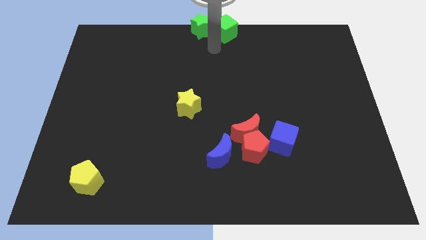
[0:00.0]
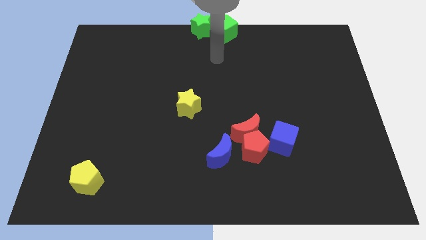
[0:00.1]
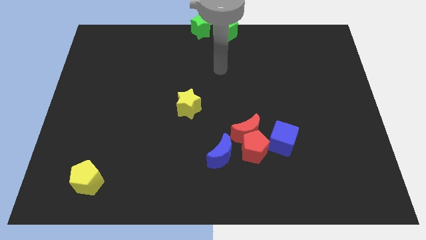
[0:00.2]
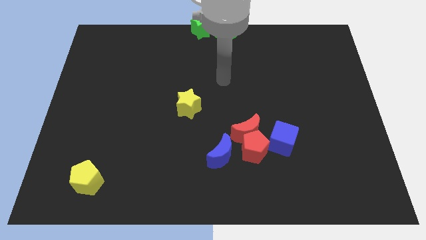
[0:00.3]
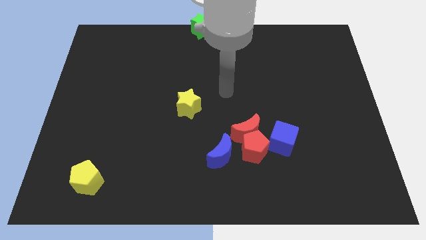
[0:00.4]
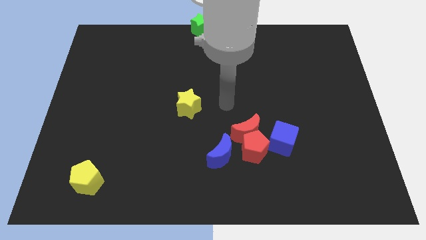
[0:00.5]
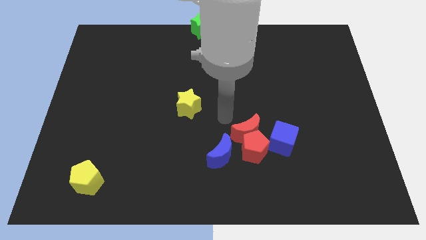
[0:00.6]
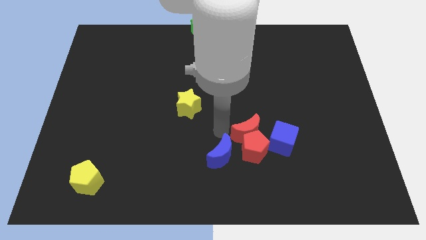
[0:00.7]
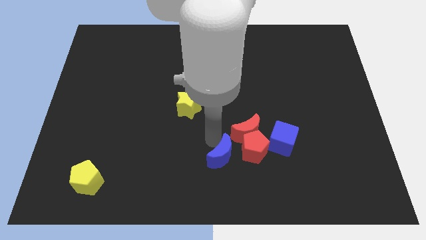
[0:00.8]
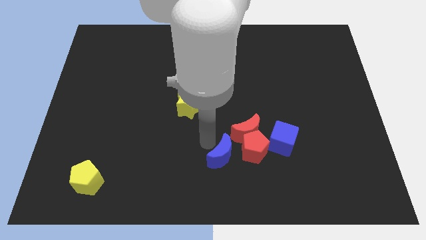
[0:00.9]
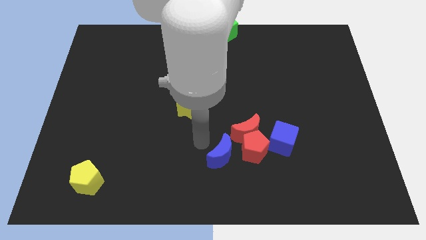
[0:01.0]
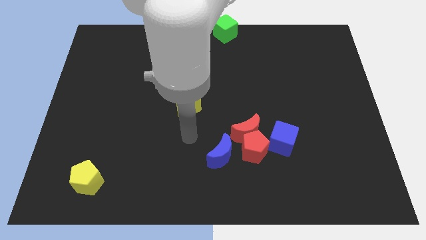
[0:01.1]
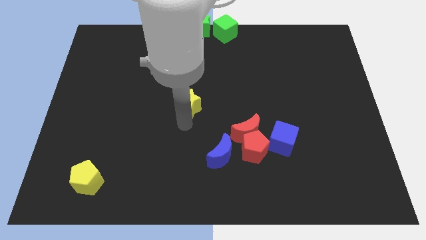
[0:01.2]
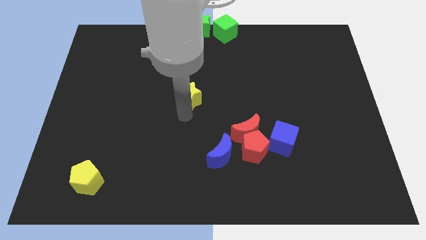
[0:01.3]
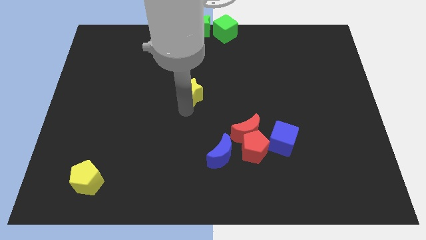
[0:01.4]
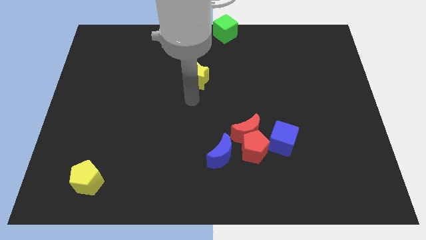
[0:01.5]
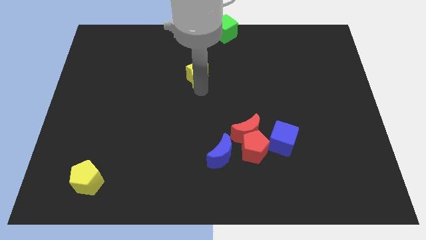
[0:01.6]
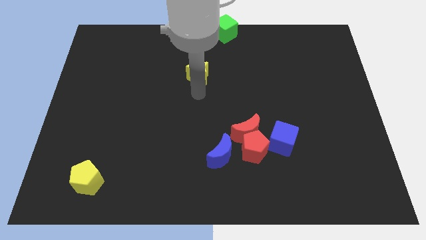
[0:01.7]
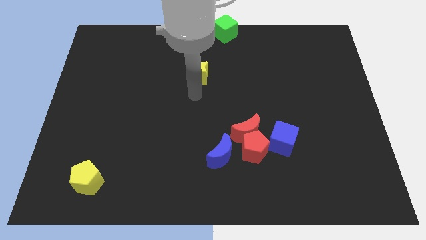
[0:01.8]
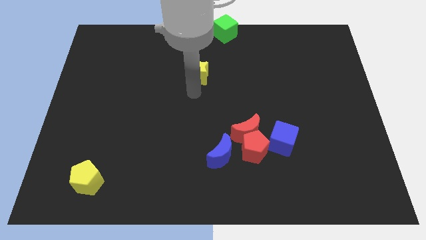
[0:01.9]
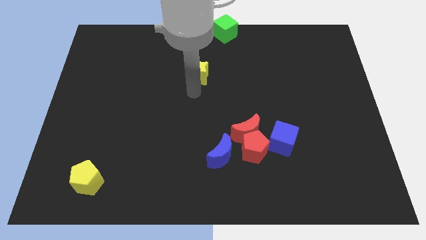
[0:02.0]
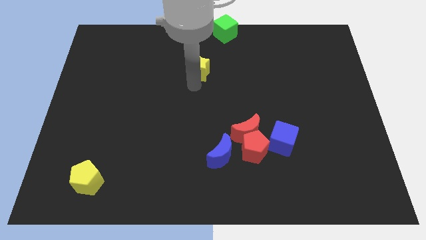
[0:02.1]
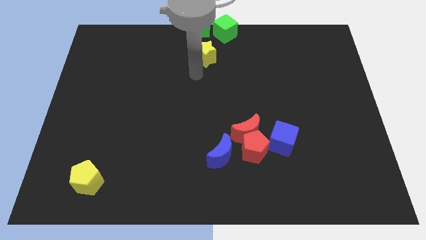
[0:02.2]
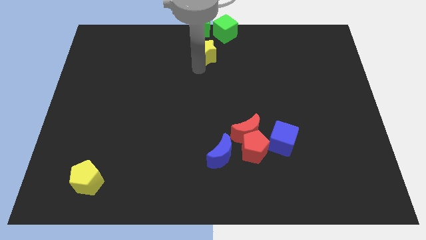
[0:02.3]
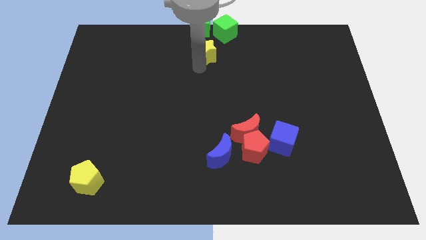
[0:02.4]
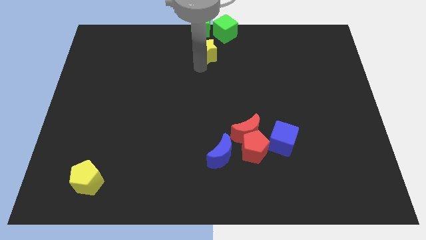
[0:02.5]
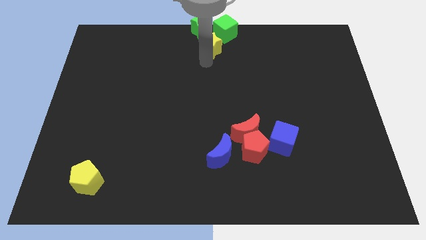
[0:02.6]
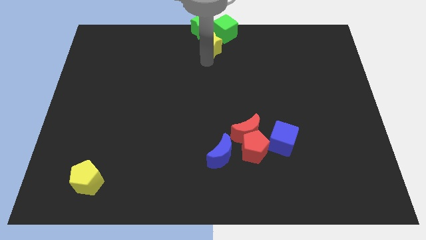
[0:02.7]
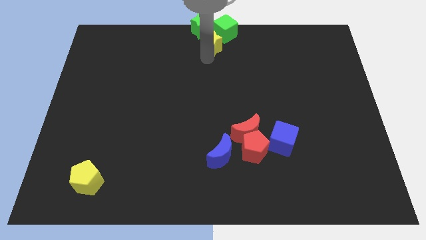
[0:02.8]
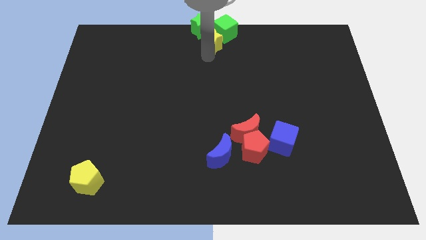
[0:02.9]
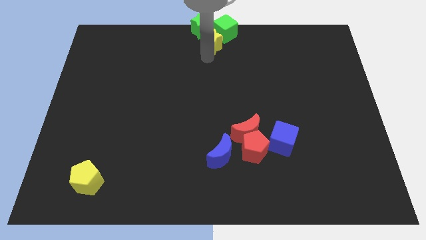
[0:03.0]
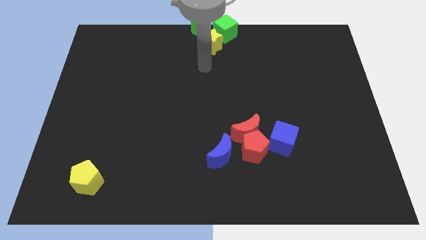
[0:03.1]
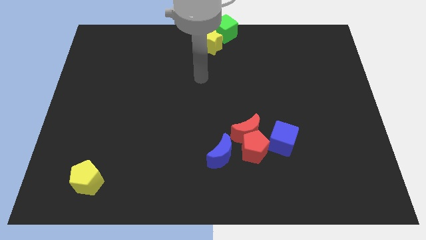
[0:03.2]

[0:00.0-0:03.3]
push the yellow star to the bottom of the green blocks

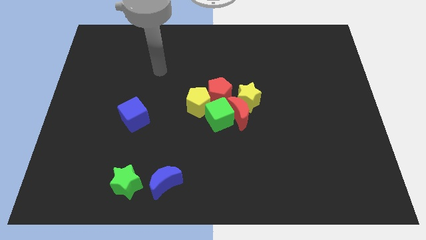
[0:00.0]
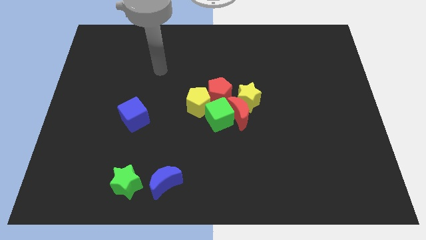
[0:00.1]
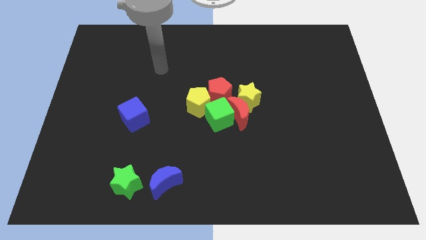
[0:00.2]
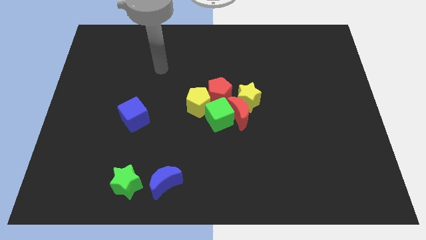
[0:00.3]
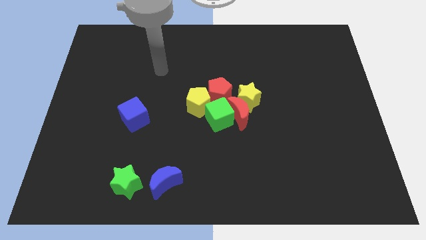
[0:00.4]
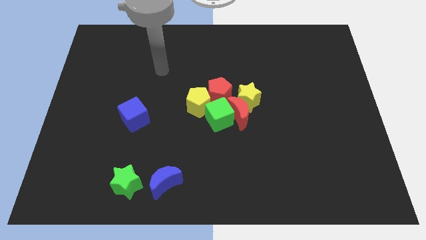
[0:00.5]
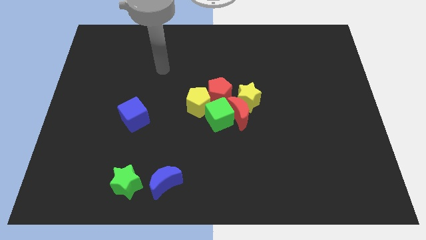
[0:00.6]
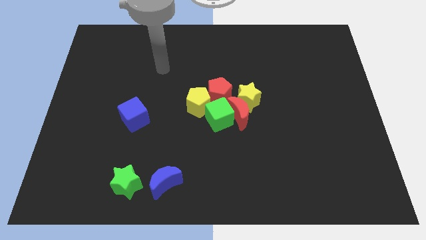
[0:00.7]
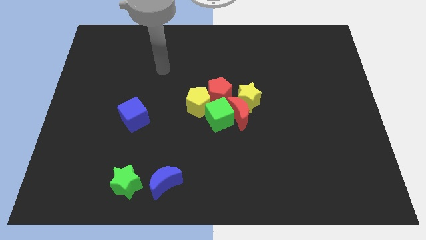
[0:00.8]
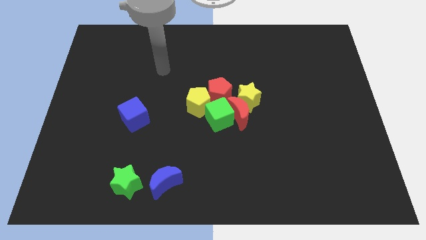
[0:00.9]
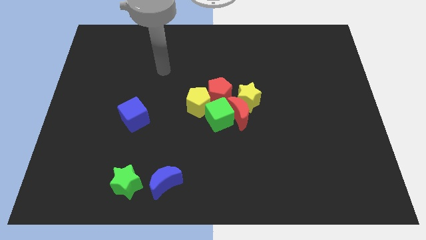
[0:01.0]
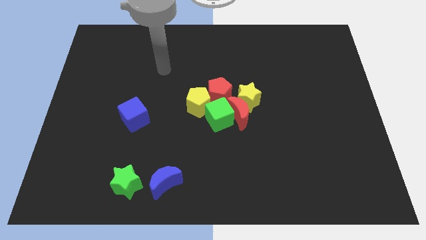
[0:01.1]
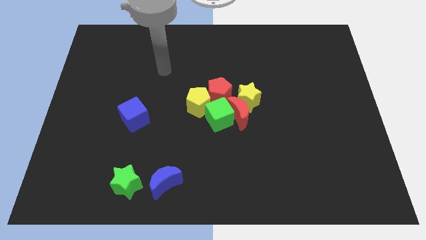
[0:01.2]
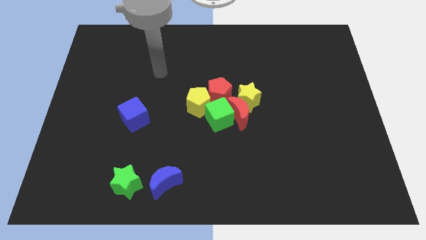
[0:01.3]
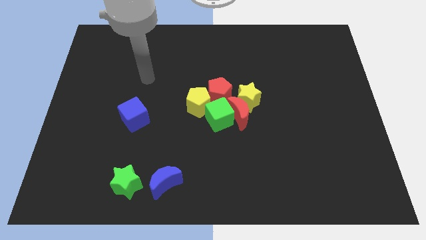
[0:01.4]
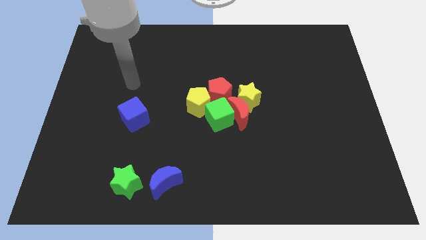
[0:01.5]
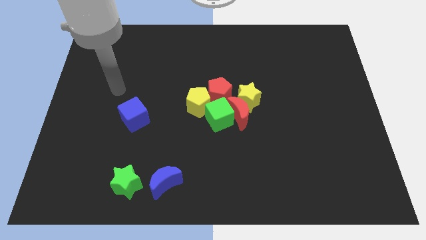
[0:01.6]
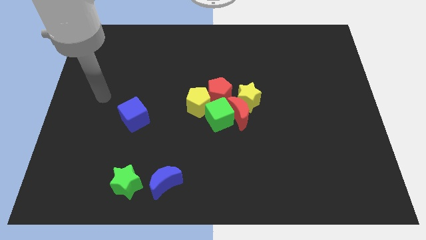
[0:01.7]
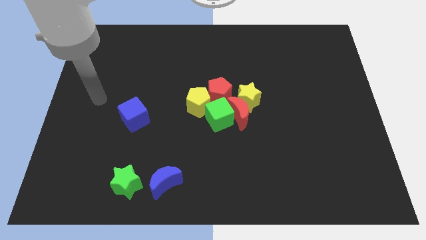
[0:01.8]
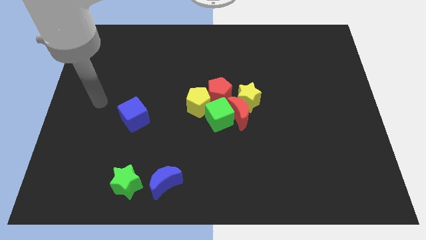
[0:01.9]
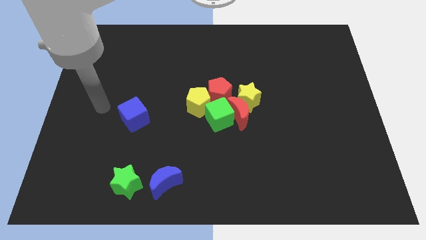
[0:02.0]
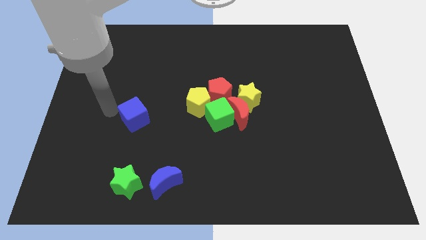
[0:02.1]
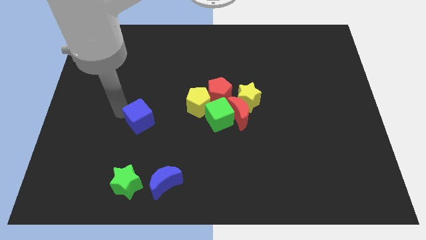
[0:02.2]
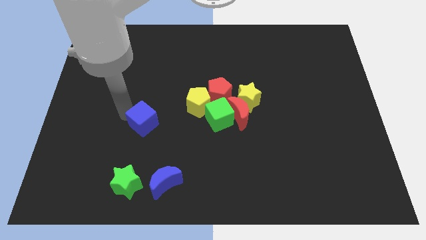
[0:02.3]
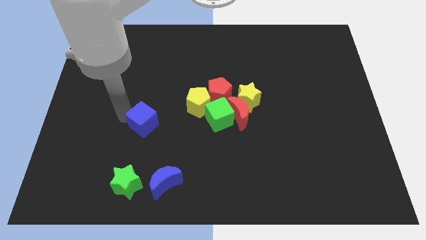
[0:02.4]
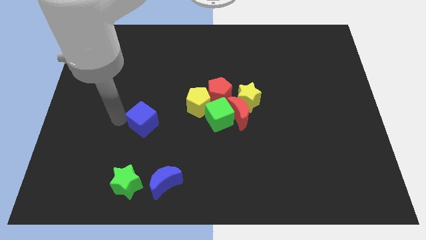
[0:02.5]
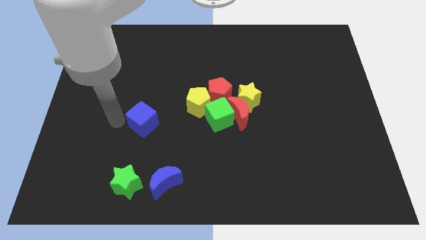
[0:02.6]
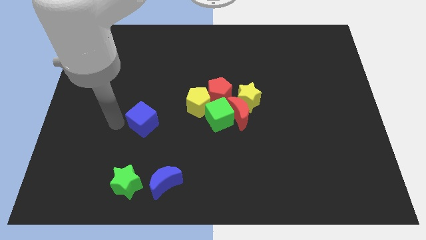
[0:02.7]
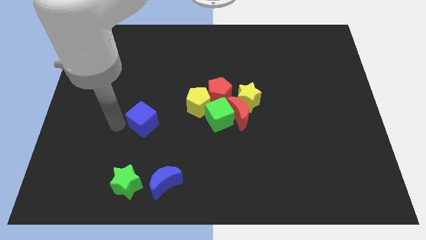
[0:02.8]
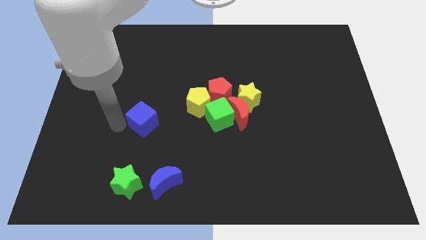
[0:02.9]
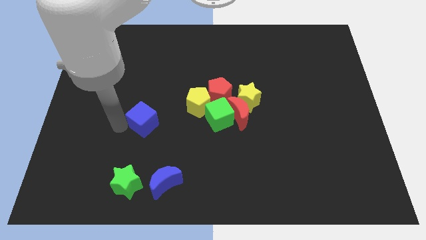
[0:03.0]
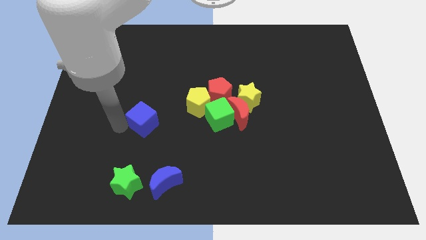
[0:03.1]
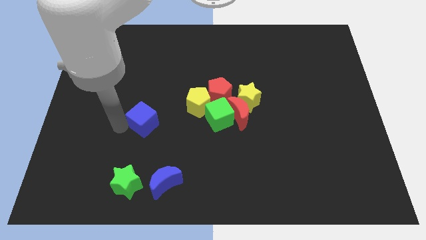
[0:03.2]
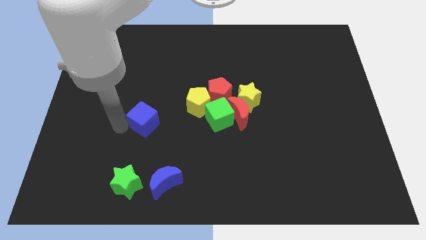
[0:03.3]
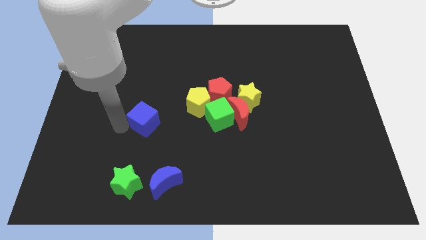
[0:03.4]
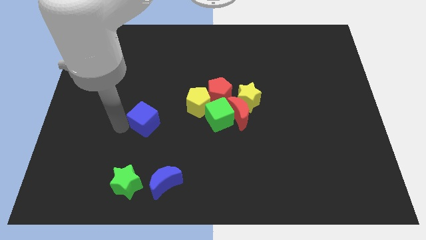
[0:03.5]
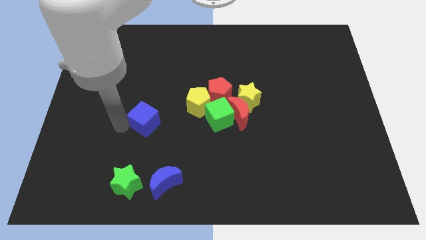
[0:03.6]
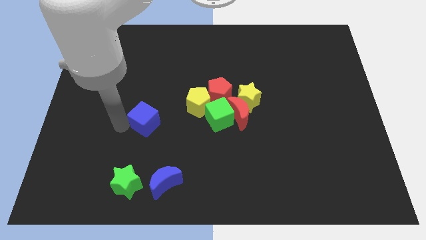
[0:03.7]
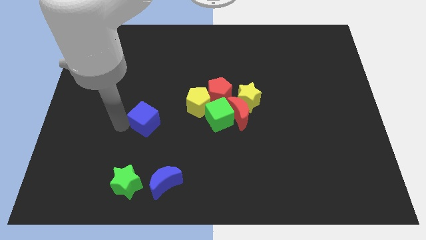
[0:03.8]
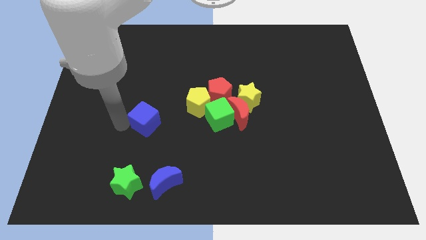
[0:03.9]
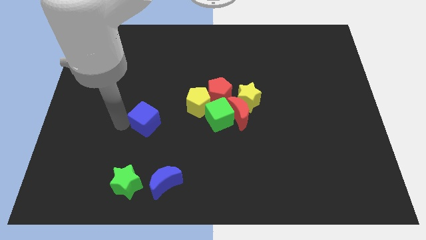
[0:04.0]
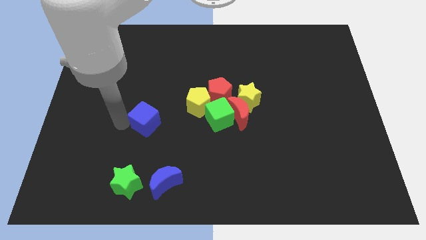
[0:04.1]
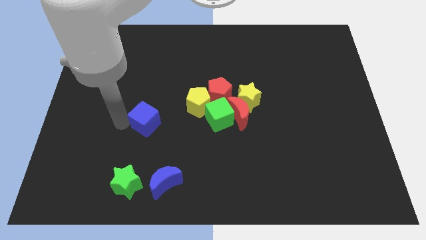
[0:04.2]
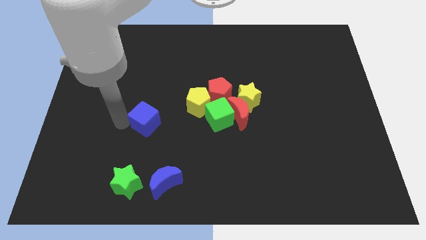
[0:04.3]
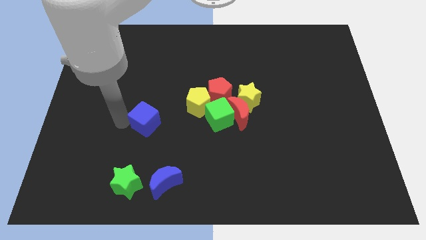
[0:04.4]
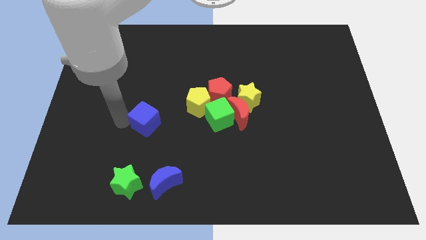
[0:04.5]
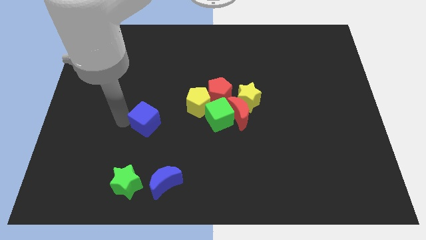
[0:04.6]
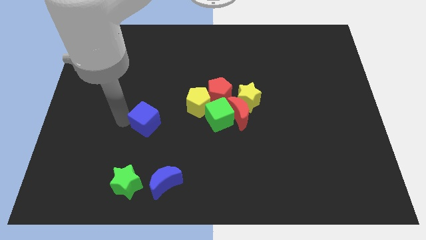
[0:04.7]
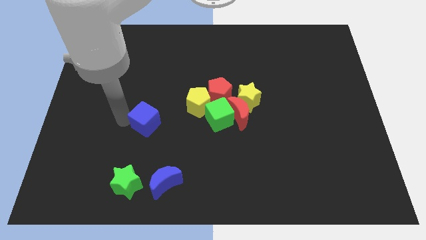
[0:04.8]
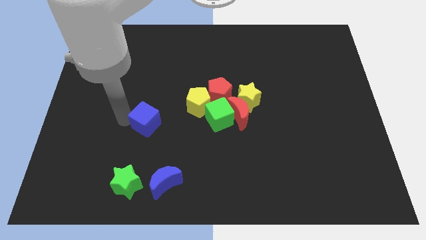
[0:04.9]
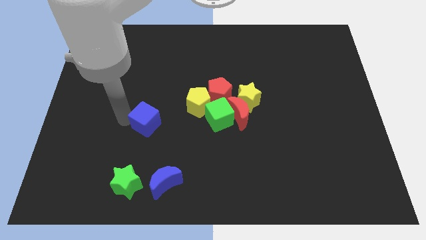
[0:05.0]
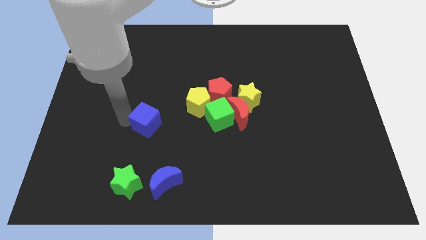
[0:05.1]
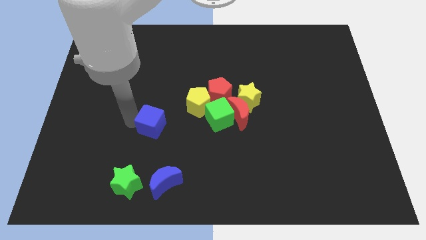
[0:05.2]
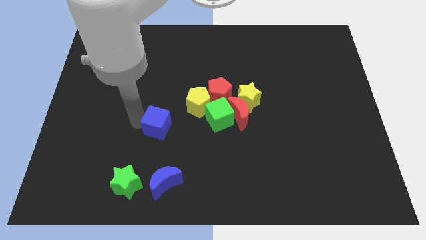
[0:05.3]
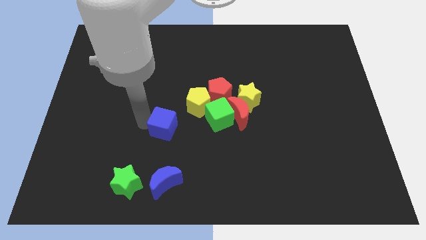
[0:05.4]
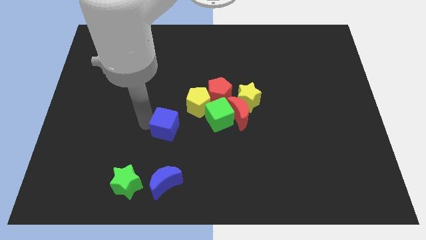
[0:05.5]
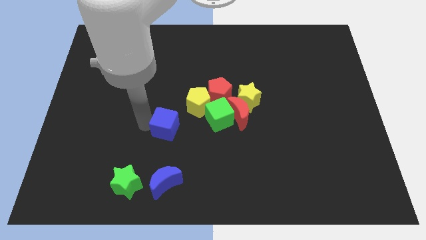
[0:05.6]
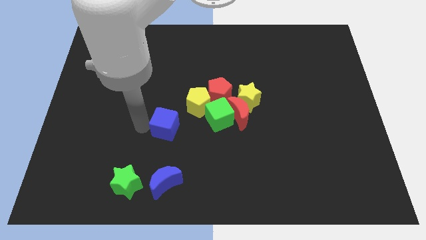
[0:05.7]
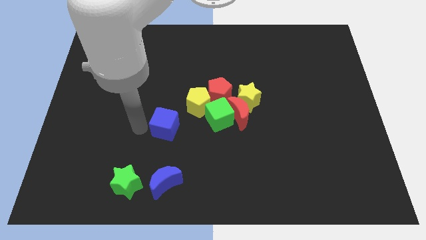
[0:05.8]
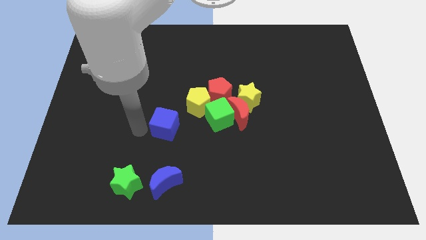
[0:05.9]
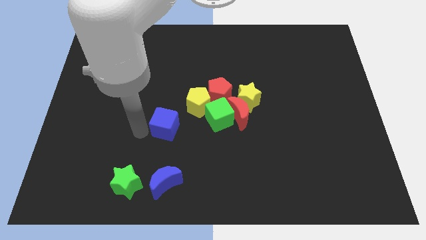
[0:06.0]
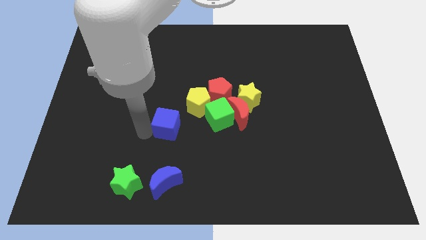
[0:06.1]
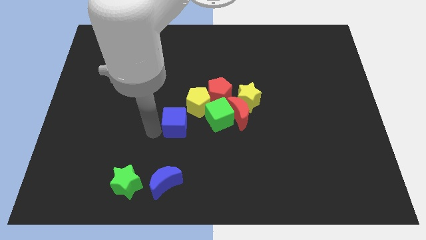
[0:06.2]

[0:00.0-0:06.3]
push the blue cube to the bottom left of yellow pentagon
